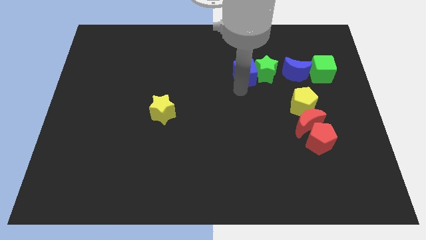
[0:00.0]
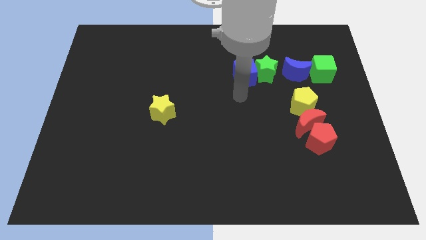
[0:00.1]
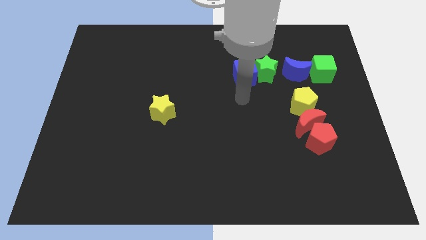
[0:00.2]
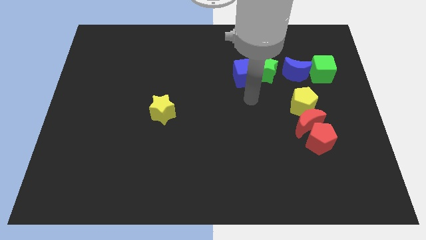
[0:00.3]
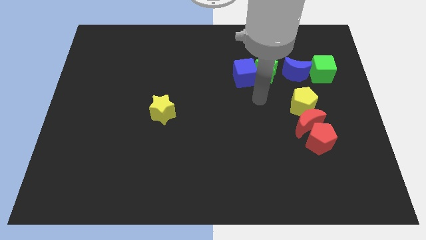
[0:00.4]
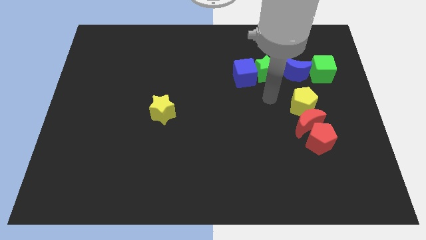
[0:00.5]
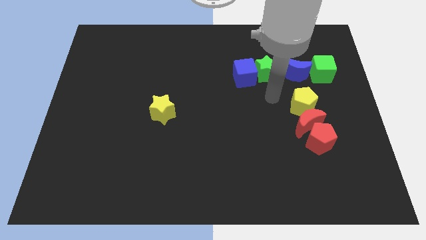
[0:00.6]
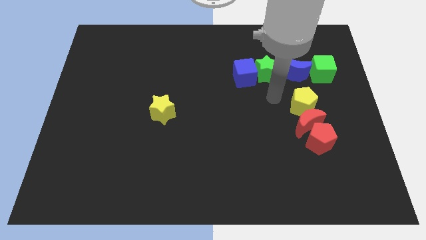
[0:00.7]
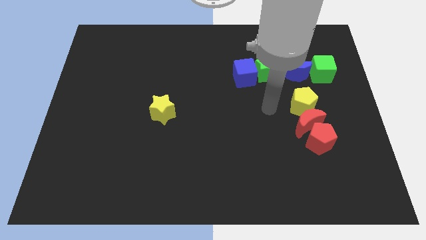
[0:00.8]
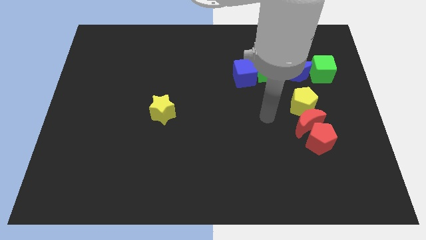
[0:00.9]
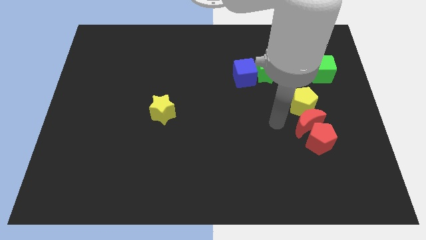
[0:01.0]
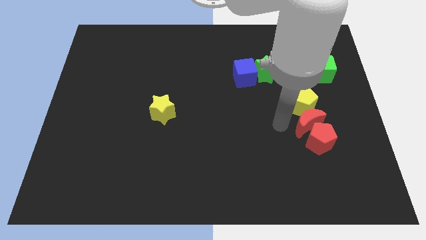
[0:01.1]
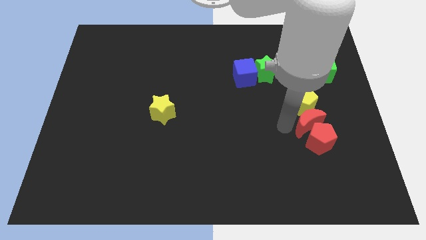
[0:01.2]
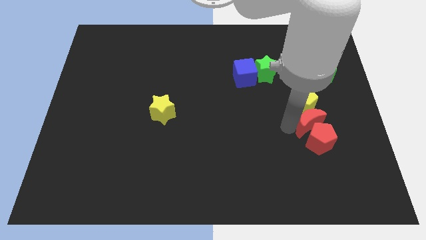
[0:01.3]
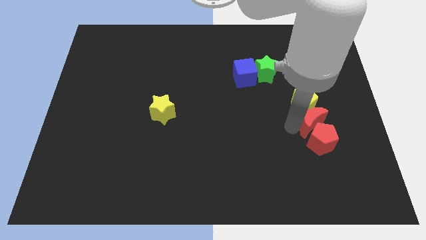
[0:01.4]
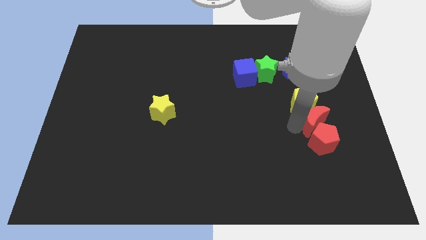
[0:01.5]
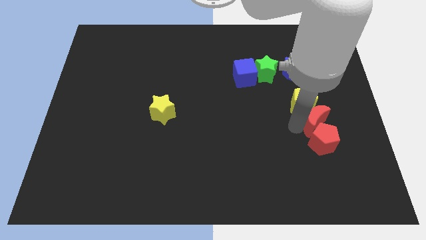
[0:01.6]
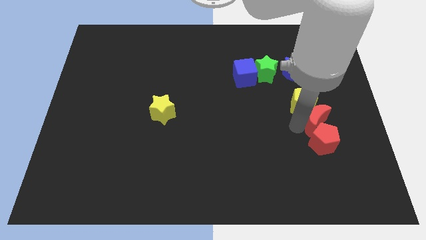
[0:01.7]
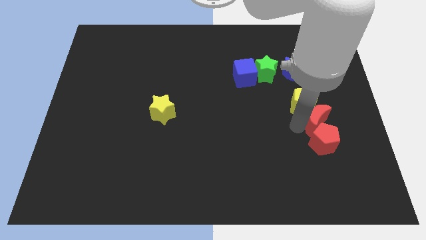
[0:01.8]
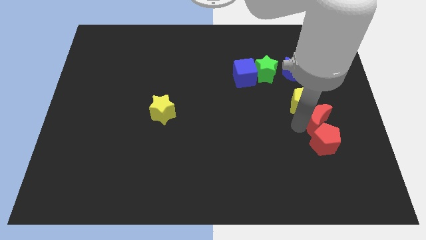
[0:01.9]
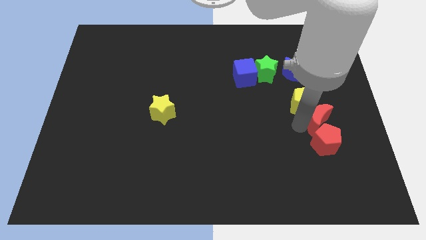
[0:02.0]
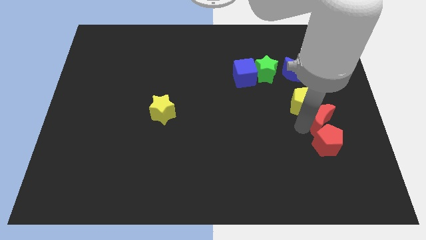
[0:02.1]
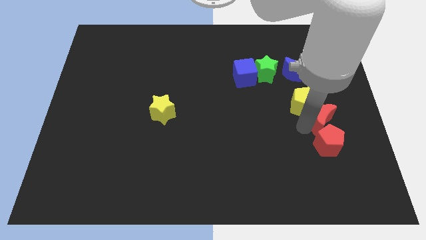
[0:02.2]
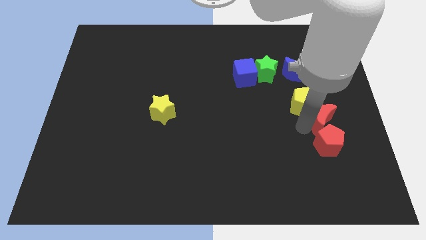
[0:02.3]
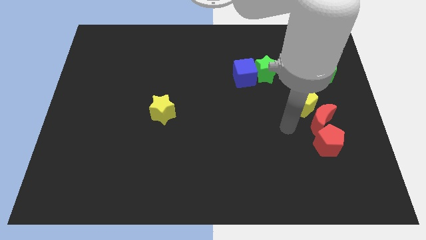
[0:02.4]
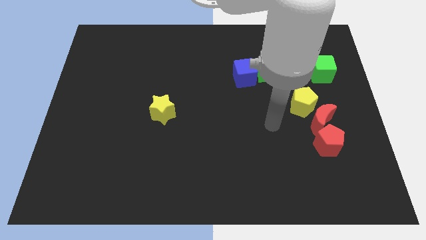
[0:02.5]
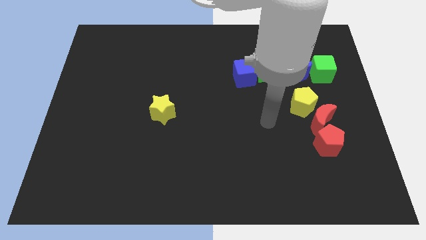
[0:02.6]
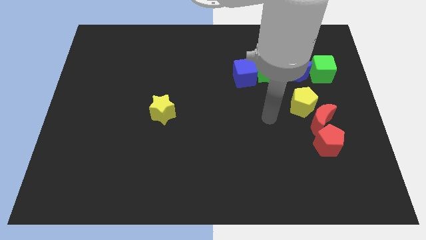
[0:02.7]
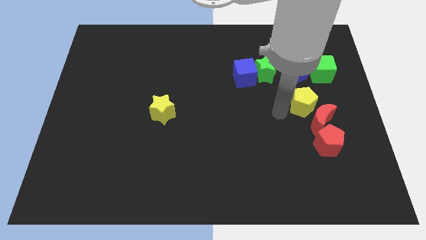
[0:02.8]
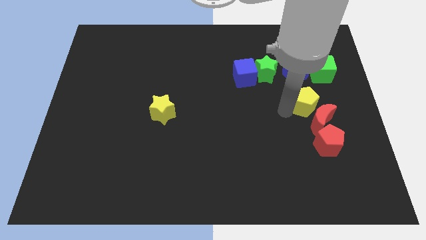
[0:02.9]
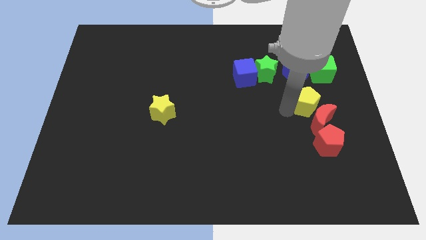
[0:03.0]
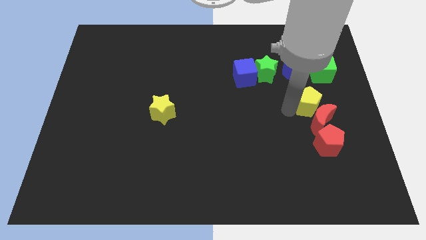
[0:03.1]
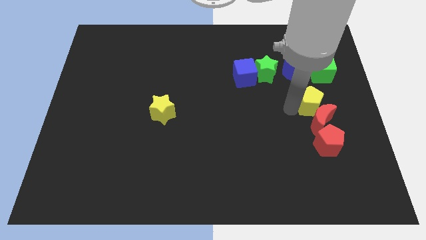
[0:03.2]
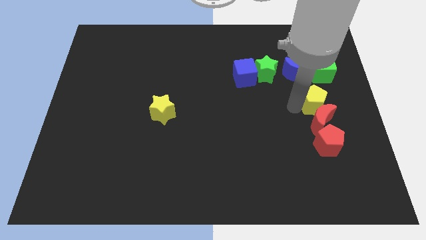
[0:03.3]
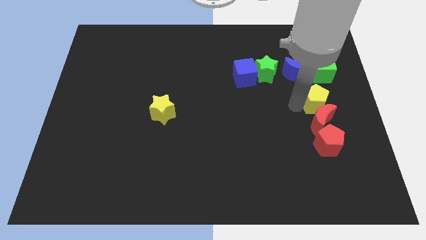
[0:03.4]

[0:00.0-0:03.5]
adjust the red moon and yellow pentagon vertically

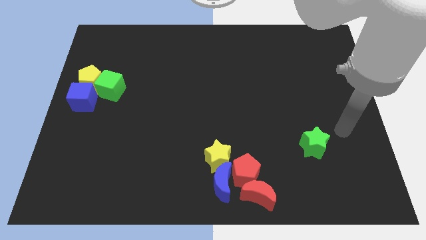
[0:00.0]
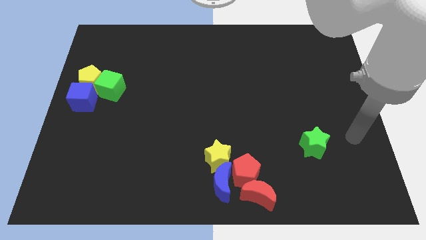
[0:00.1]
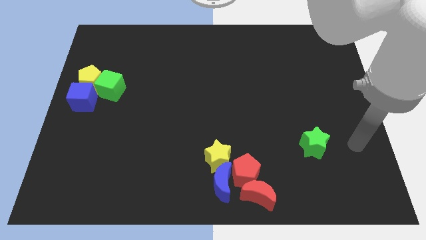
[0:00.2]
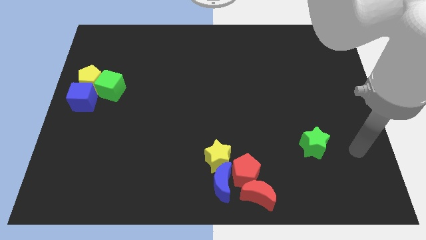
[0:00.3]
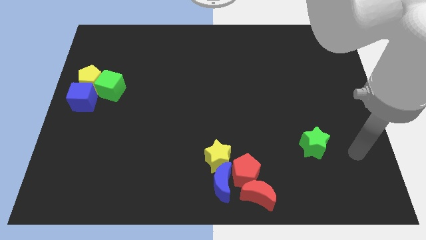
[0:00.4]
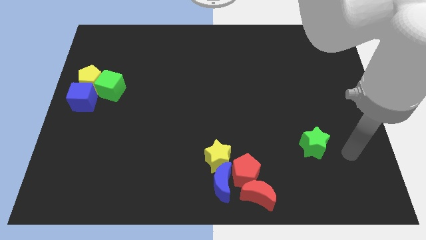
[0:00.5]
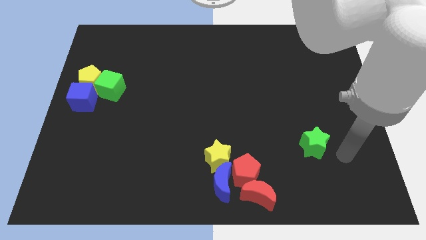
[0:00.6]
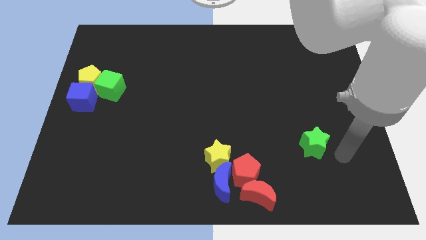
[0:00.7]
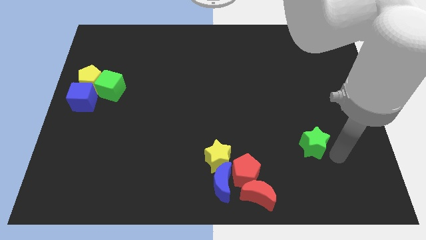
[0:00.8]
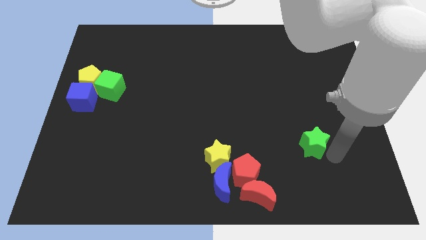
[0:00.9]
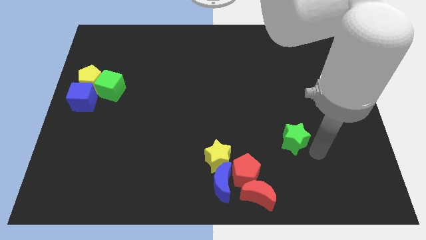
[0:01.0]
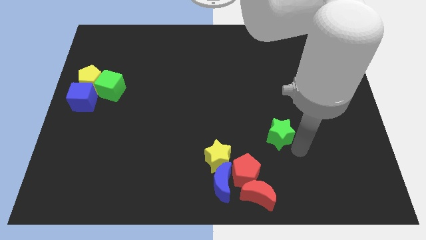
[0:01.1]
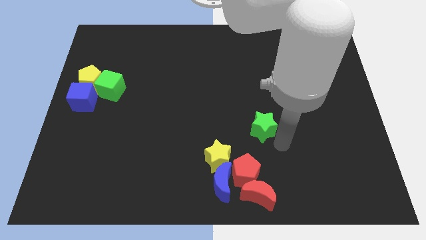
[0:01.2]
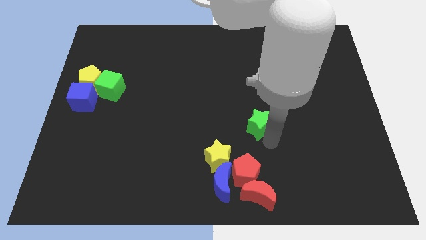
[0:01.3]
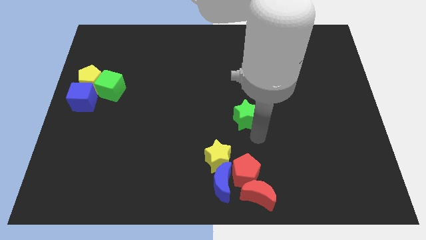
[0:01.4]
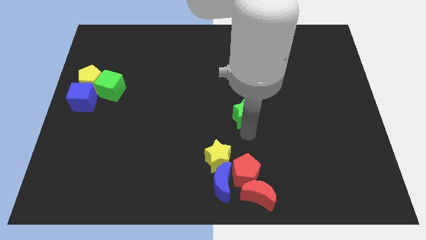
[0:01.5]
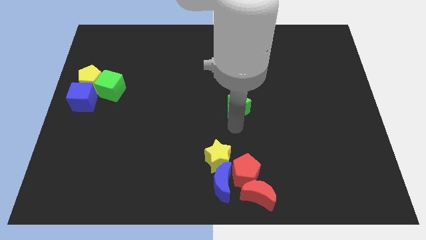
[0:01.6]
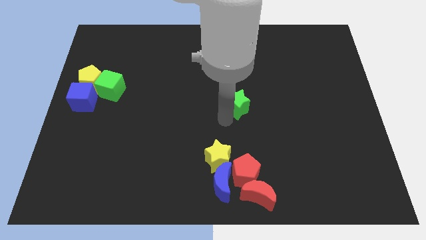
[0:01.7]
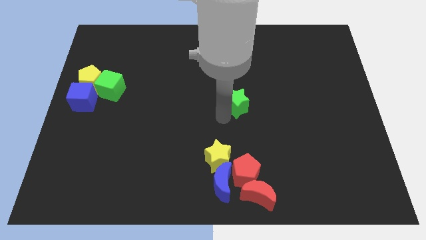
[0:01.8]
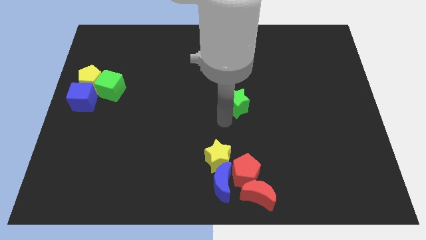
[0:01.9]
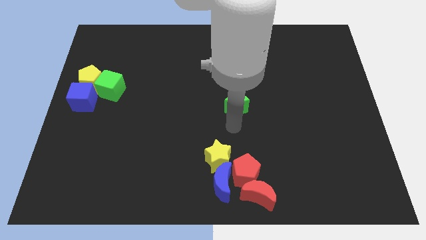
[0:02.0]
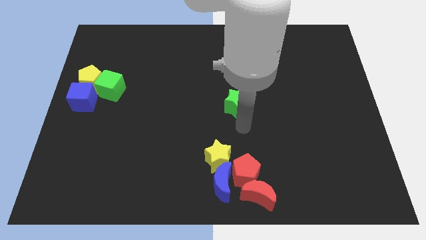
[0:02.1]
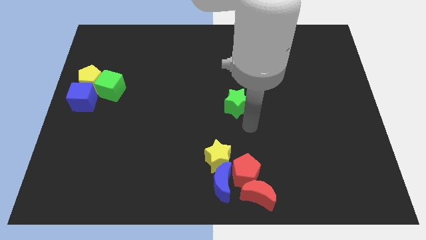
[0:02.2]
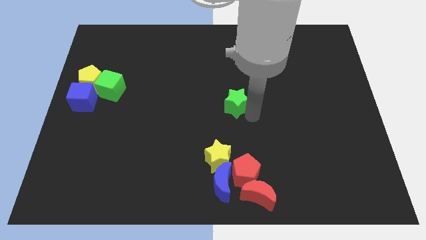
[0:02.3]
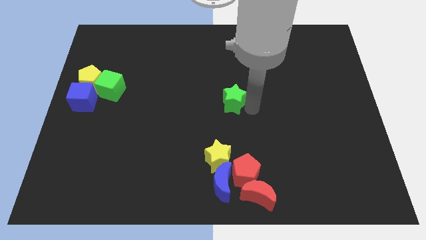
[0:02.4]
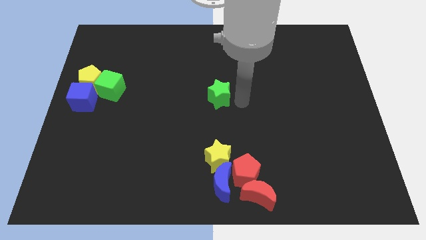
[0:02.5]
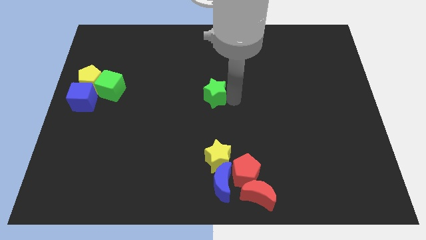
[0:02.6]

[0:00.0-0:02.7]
place the green star at center of the board

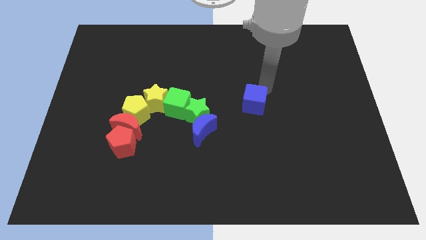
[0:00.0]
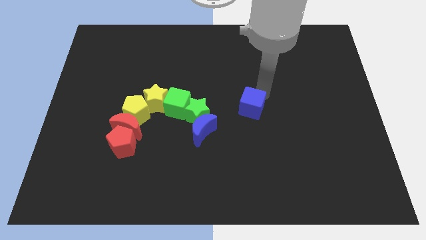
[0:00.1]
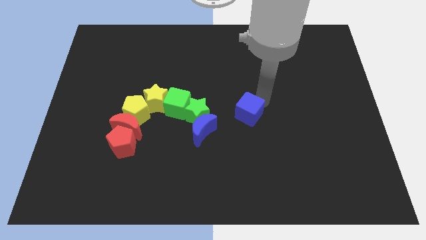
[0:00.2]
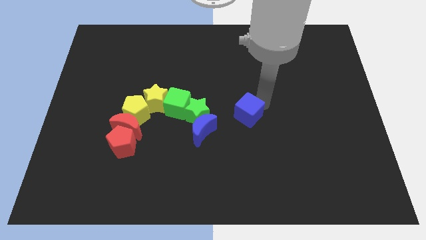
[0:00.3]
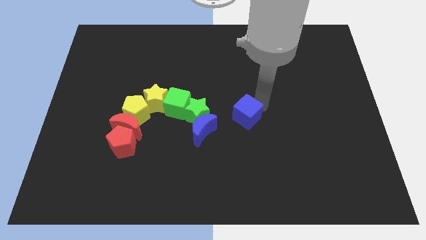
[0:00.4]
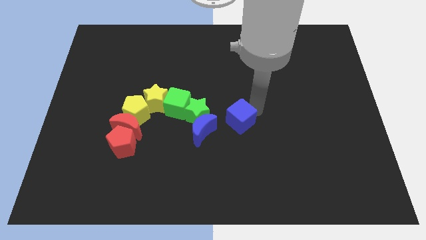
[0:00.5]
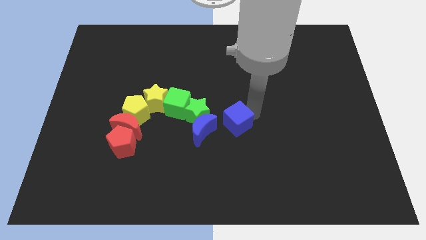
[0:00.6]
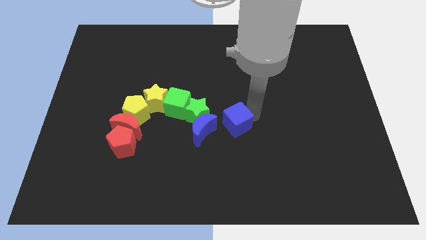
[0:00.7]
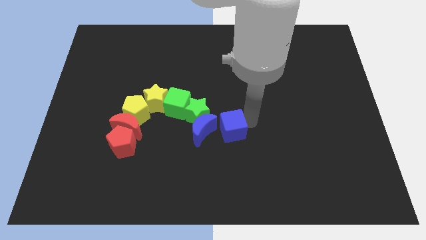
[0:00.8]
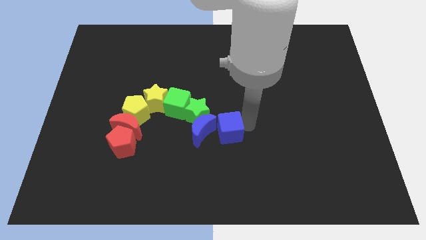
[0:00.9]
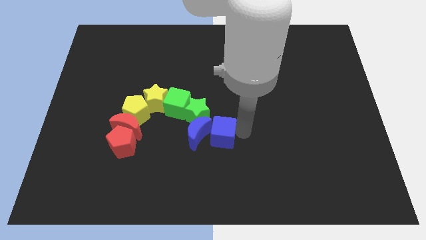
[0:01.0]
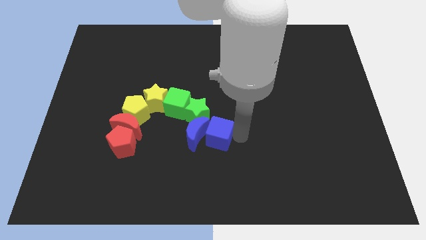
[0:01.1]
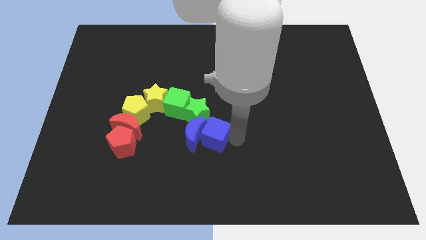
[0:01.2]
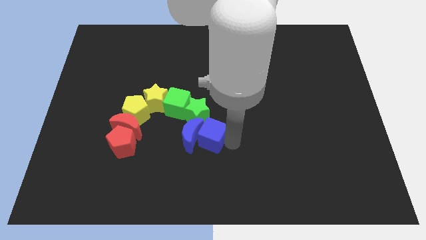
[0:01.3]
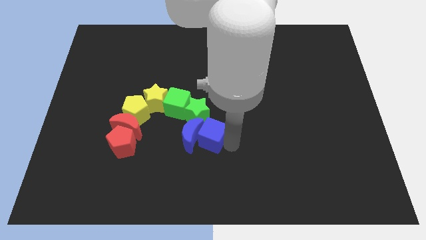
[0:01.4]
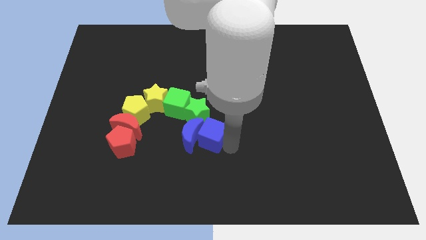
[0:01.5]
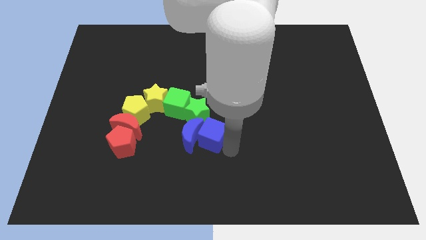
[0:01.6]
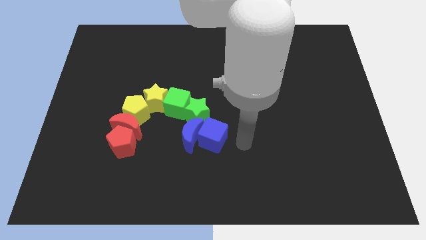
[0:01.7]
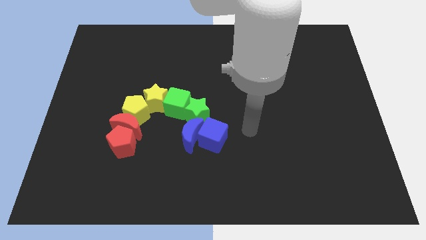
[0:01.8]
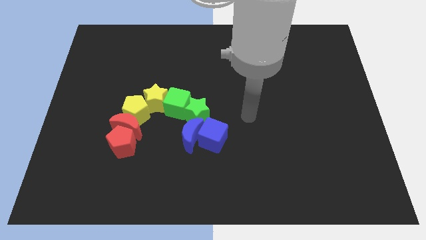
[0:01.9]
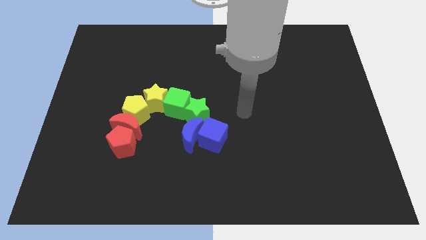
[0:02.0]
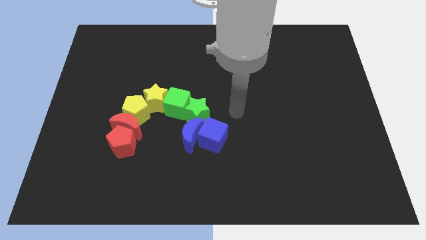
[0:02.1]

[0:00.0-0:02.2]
push the blue moon with the blue cube

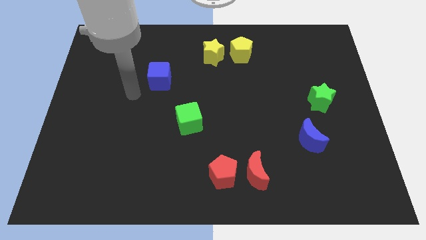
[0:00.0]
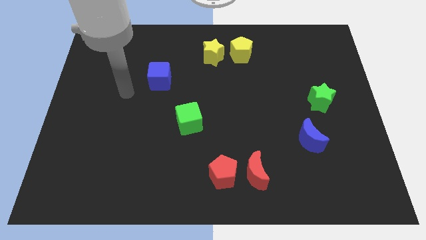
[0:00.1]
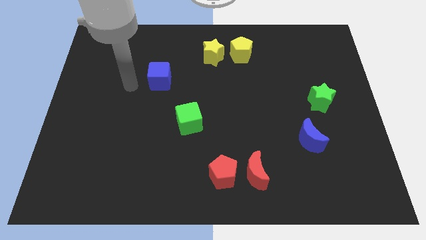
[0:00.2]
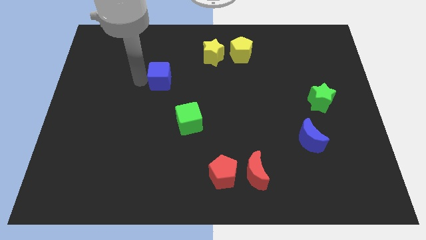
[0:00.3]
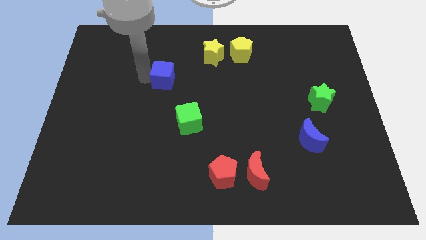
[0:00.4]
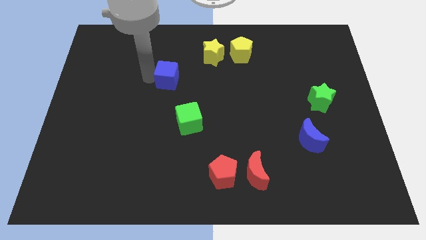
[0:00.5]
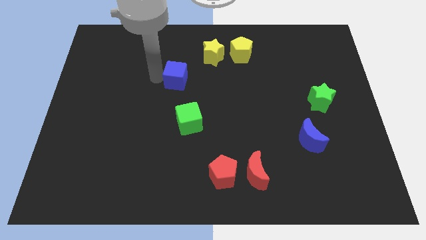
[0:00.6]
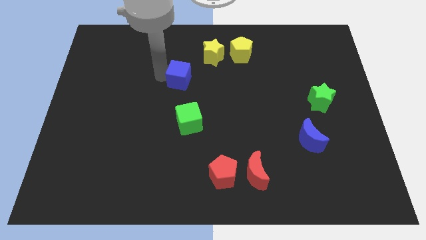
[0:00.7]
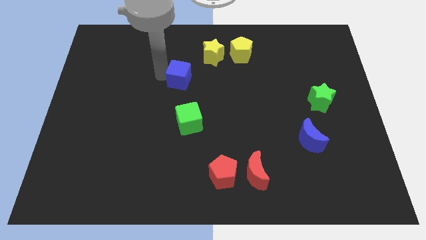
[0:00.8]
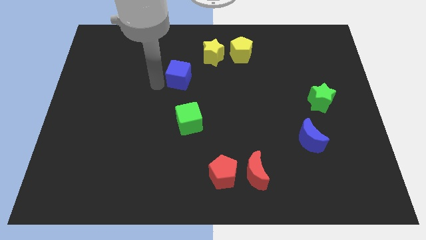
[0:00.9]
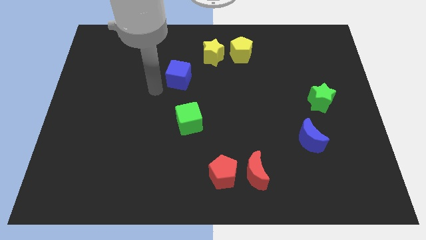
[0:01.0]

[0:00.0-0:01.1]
move blue cube to the top left of green cube
